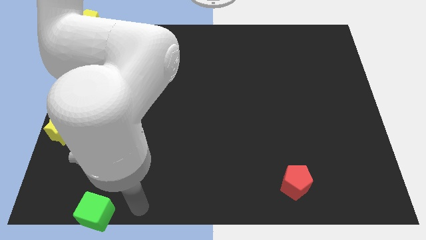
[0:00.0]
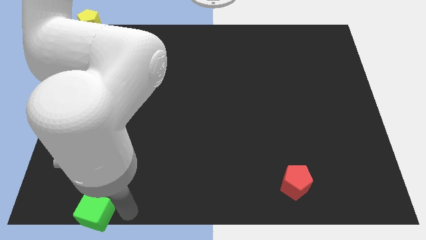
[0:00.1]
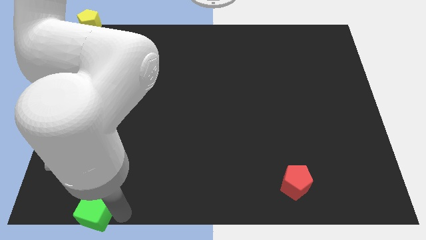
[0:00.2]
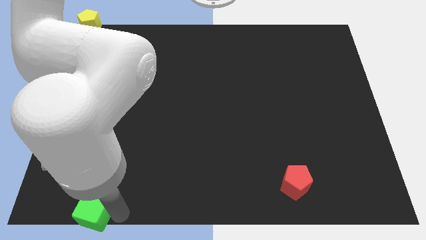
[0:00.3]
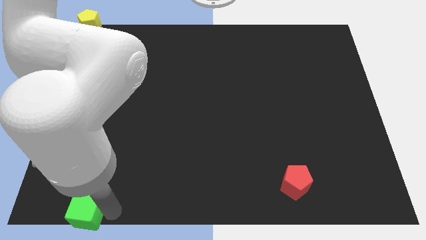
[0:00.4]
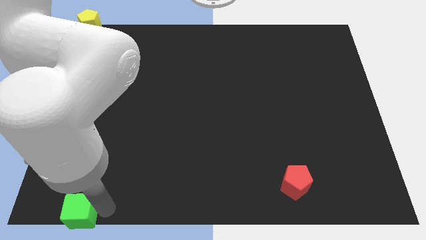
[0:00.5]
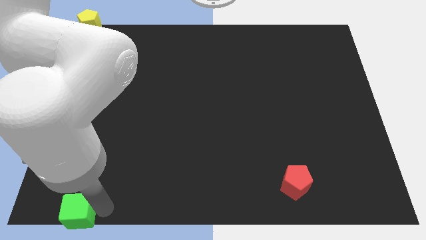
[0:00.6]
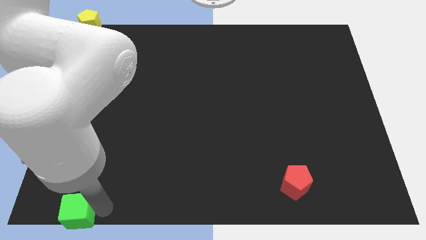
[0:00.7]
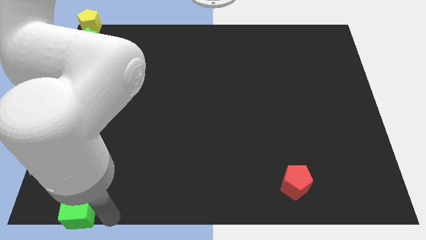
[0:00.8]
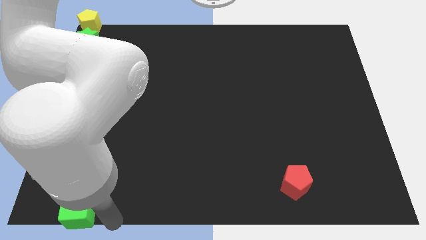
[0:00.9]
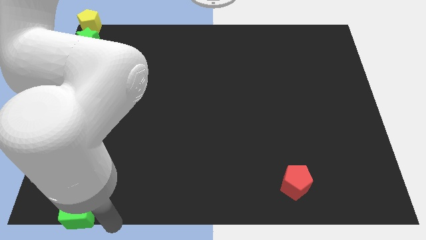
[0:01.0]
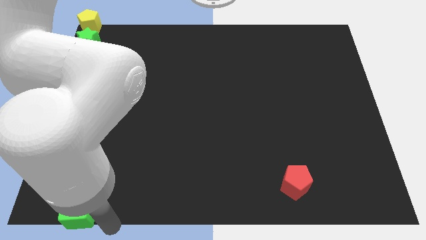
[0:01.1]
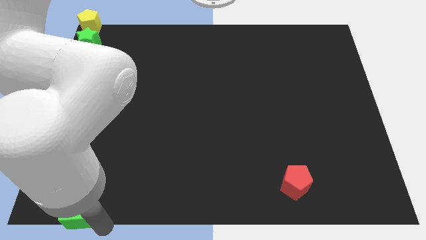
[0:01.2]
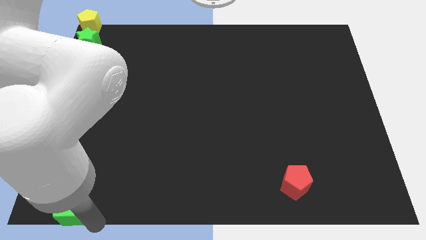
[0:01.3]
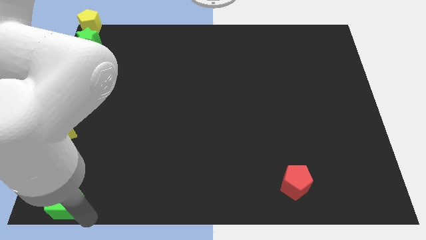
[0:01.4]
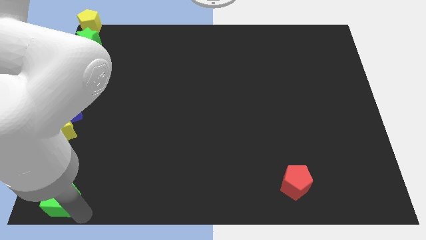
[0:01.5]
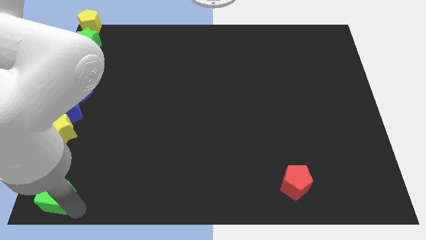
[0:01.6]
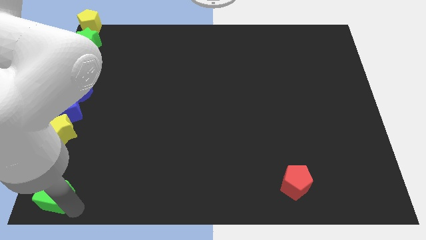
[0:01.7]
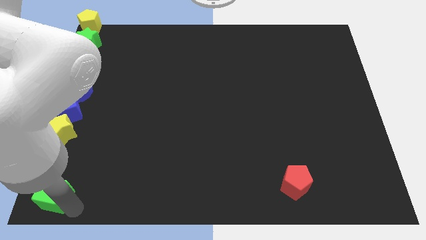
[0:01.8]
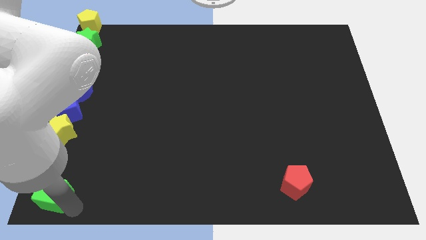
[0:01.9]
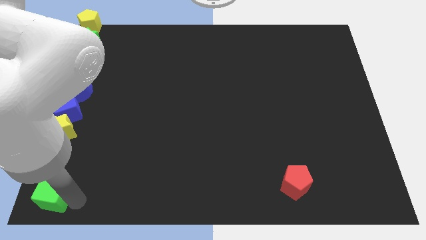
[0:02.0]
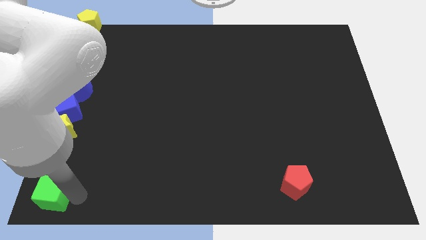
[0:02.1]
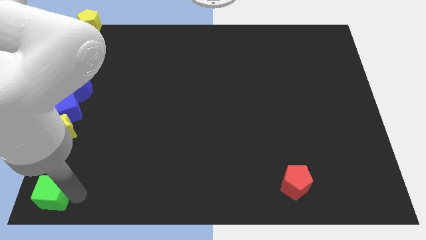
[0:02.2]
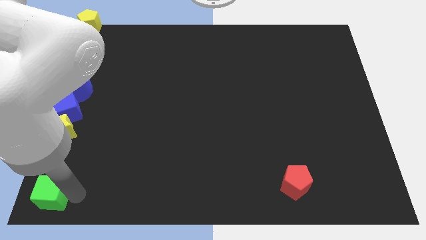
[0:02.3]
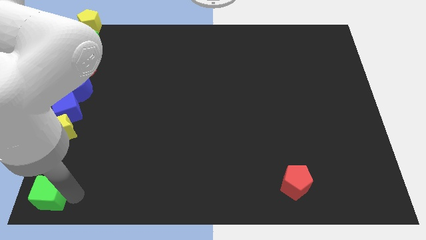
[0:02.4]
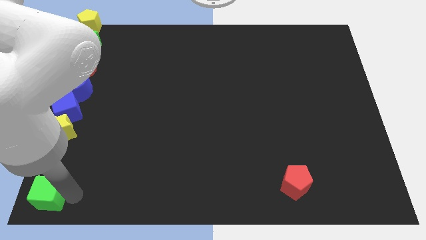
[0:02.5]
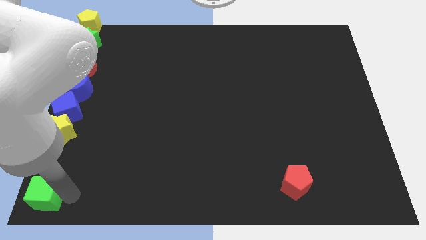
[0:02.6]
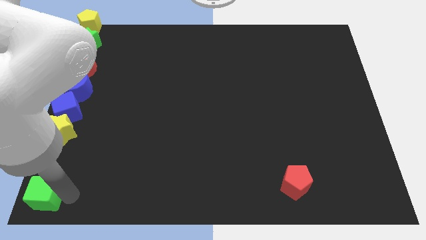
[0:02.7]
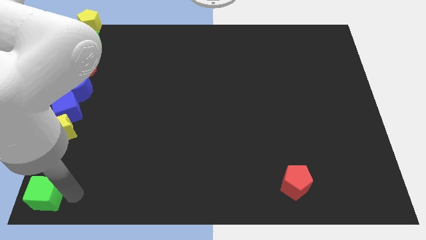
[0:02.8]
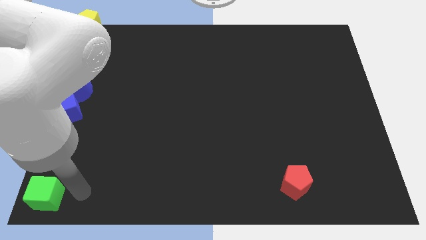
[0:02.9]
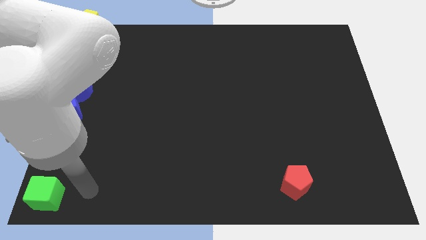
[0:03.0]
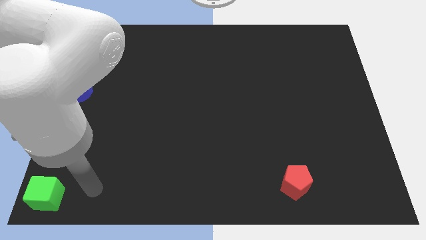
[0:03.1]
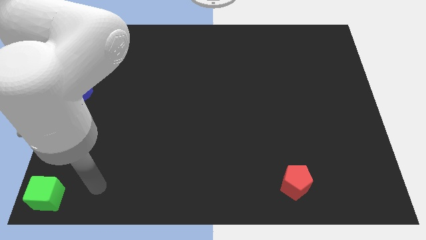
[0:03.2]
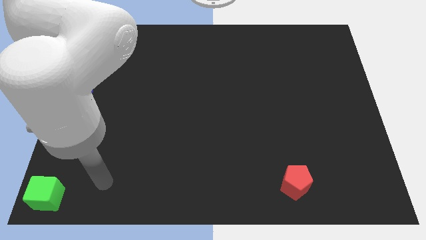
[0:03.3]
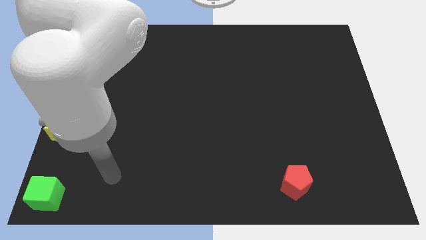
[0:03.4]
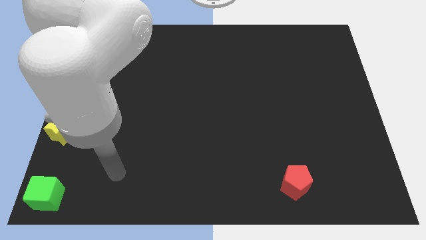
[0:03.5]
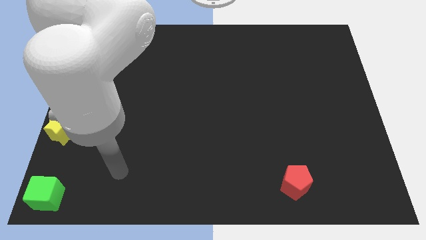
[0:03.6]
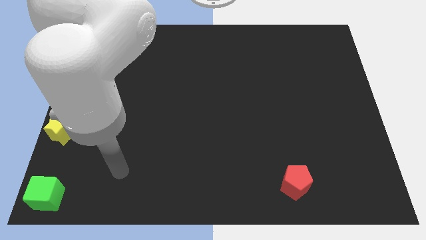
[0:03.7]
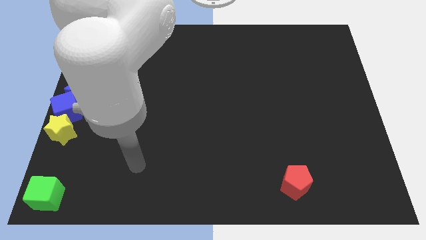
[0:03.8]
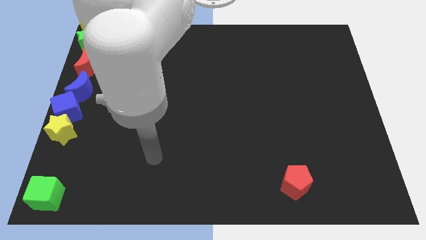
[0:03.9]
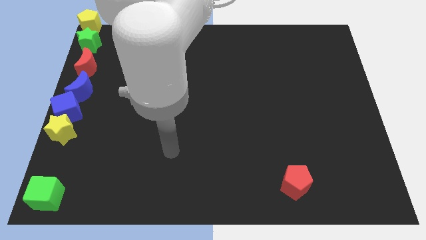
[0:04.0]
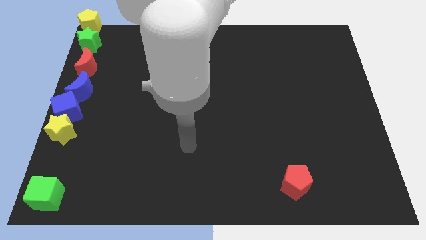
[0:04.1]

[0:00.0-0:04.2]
push the green cube to the bottom left corner of the board

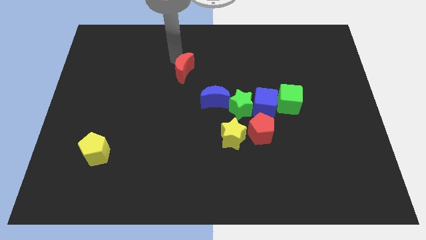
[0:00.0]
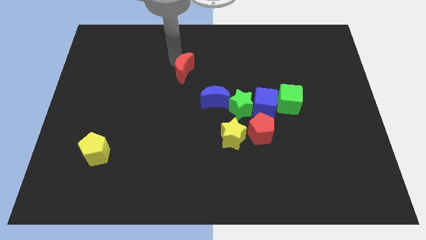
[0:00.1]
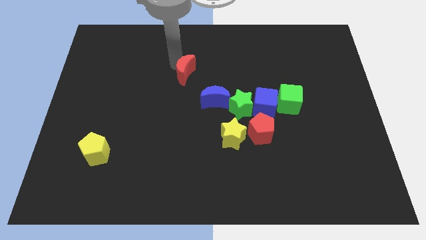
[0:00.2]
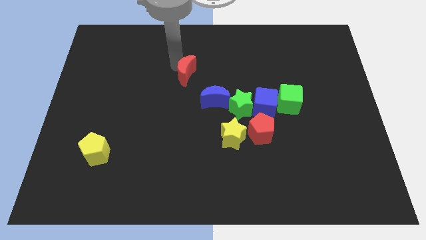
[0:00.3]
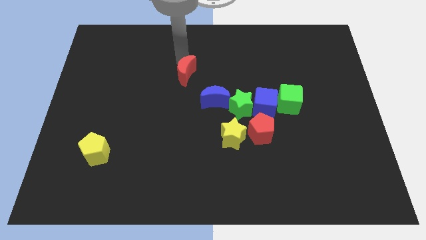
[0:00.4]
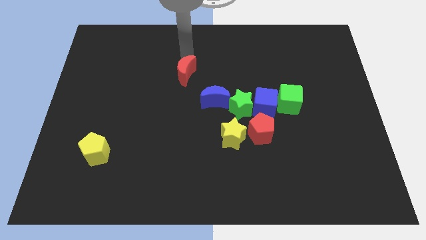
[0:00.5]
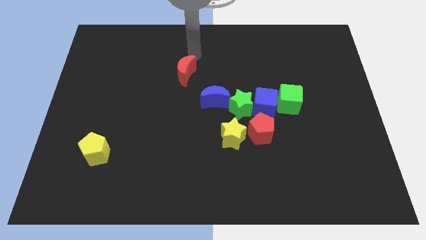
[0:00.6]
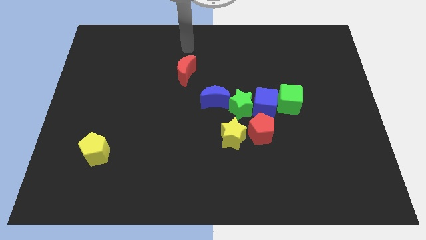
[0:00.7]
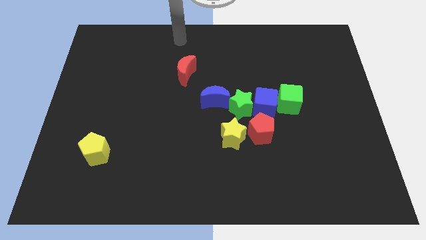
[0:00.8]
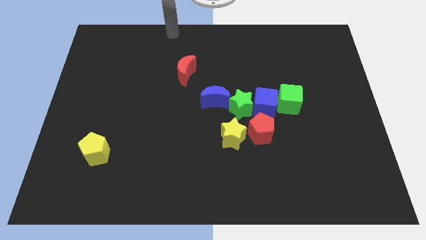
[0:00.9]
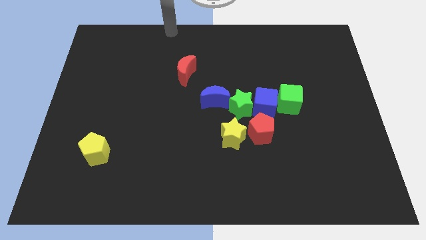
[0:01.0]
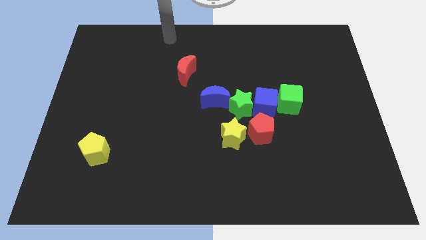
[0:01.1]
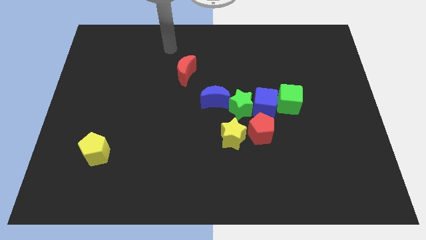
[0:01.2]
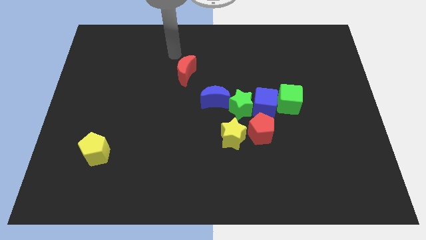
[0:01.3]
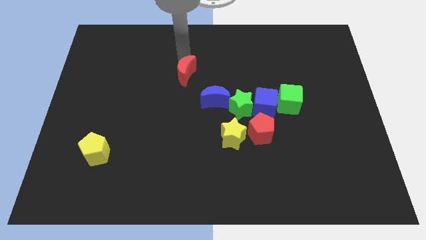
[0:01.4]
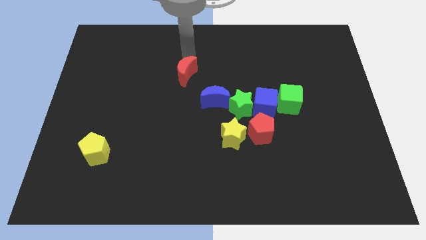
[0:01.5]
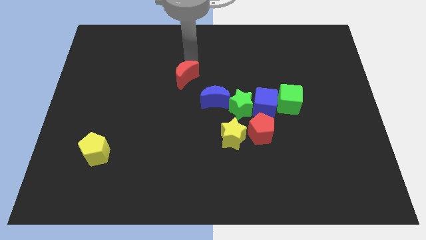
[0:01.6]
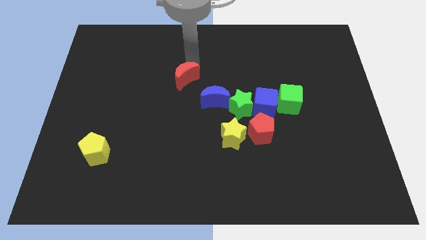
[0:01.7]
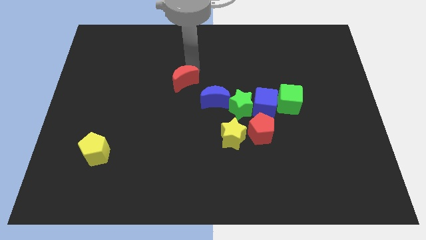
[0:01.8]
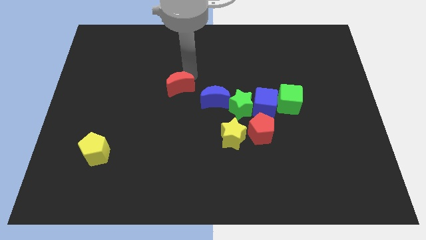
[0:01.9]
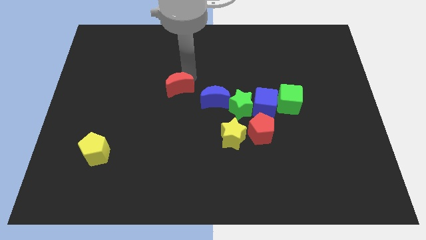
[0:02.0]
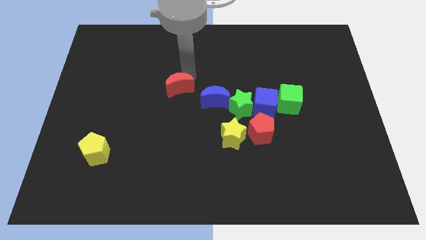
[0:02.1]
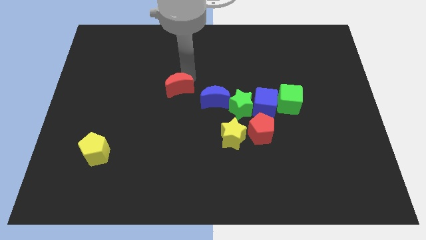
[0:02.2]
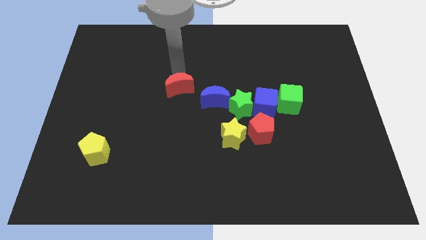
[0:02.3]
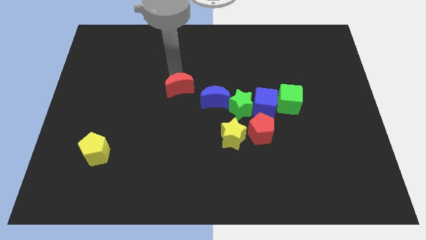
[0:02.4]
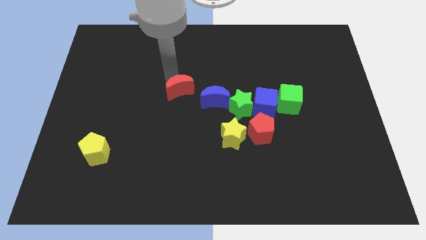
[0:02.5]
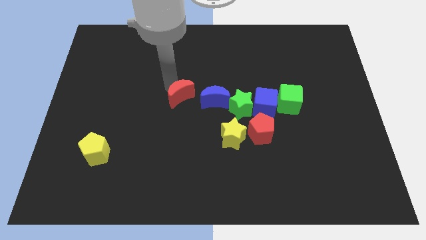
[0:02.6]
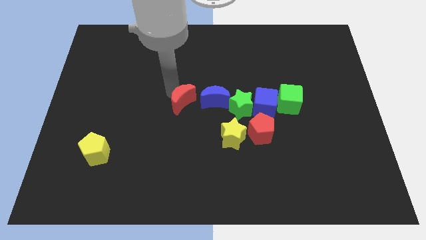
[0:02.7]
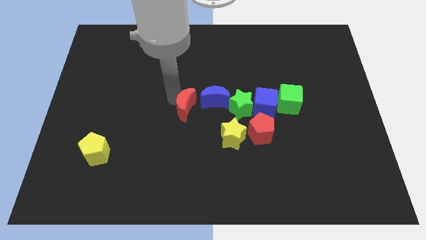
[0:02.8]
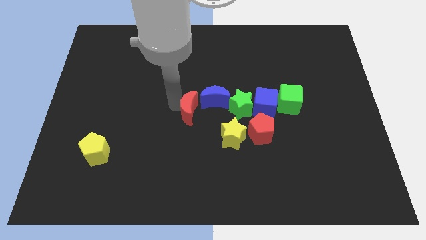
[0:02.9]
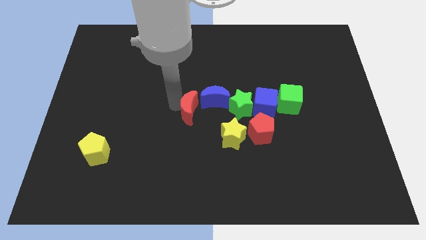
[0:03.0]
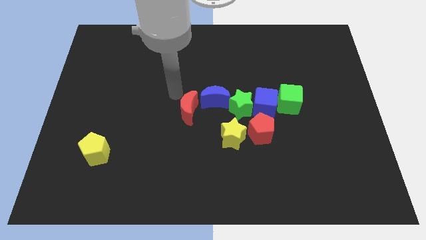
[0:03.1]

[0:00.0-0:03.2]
move red moon to the left of blue moon

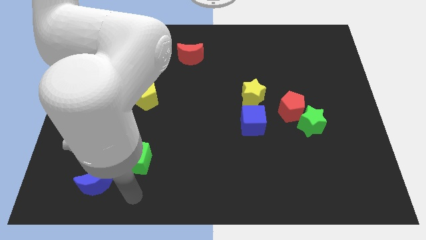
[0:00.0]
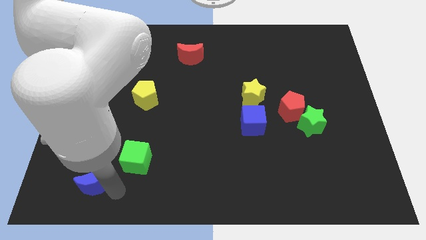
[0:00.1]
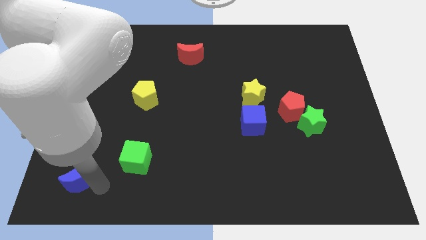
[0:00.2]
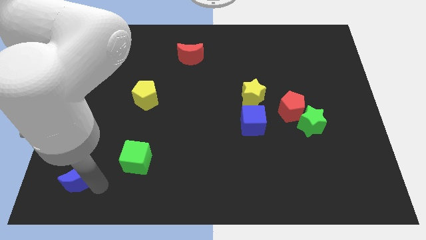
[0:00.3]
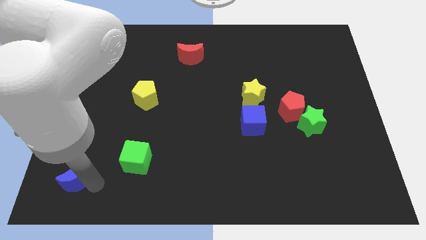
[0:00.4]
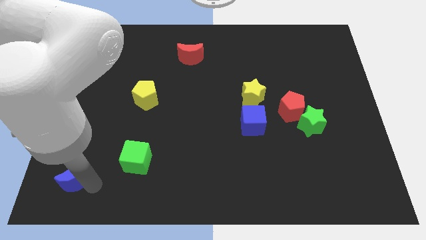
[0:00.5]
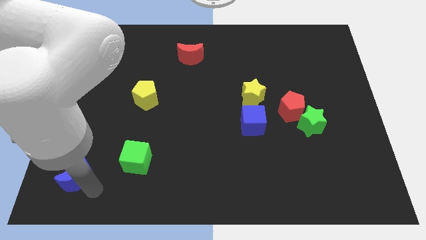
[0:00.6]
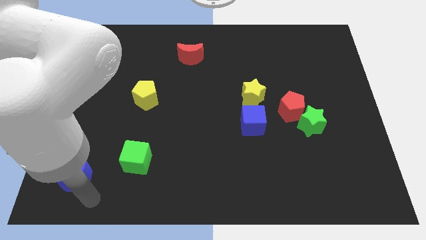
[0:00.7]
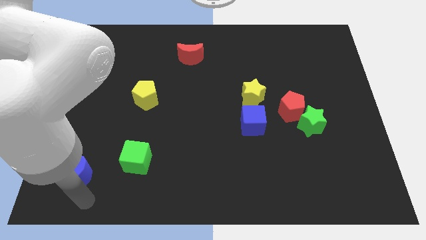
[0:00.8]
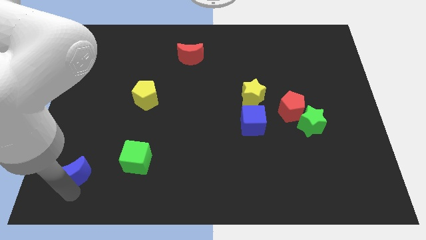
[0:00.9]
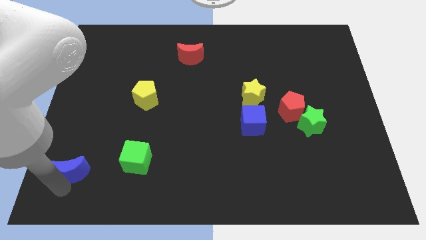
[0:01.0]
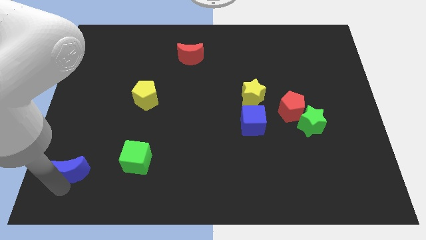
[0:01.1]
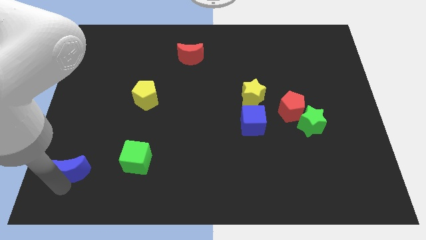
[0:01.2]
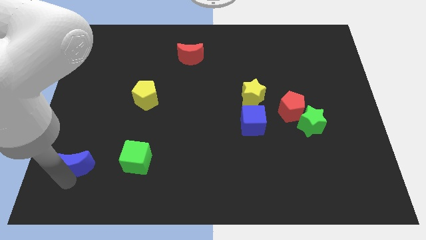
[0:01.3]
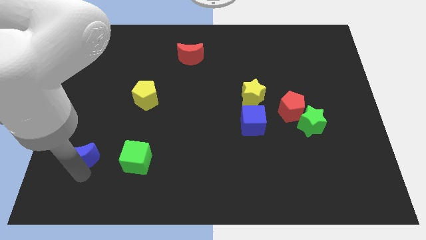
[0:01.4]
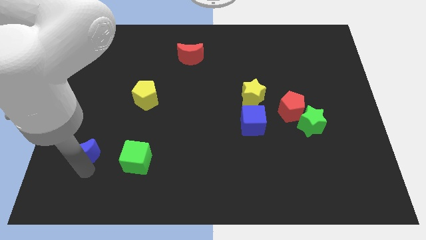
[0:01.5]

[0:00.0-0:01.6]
place the blue moon to the left of the green cube
